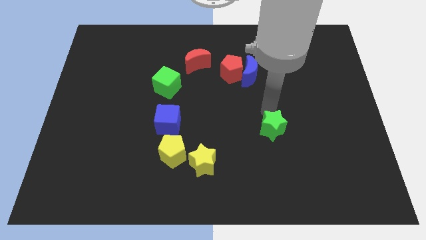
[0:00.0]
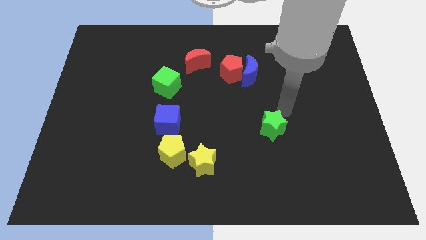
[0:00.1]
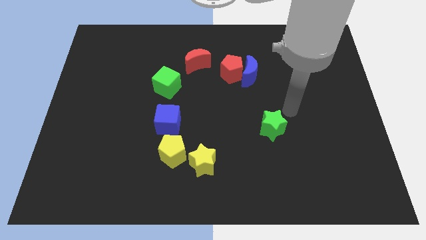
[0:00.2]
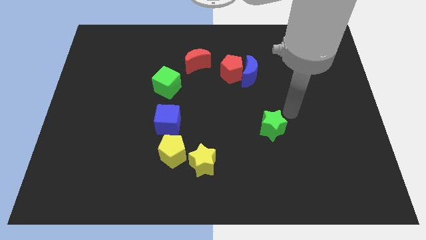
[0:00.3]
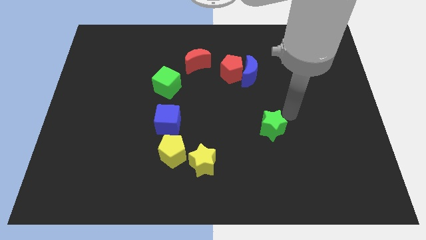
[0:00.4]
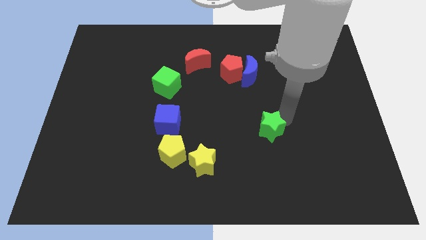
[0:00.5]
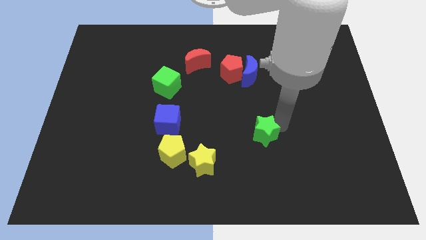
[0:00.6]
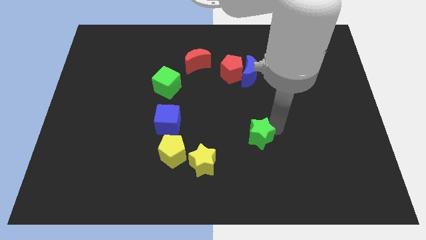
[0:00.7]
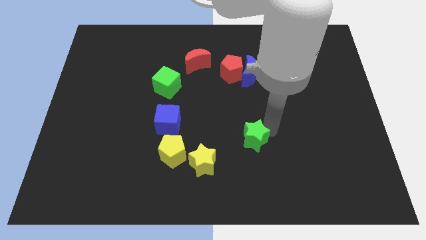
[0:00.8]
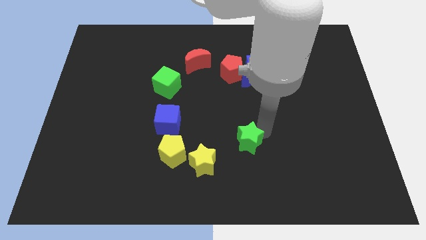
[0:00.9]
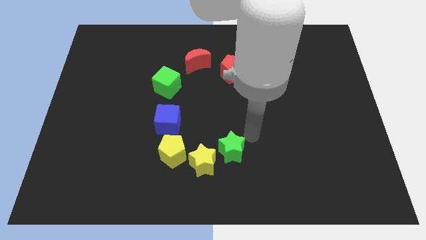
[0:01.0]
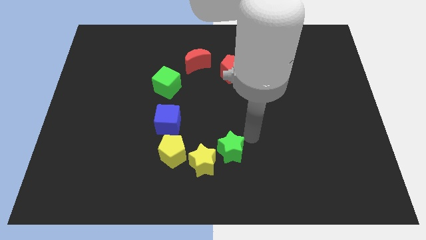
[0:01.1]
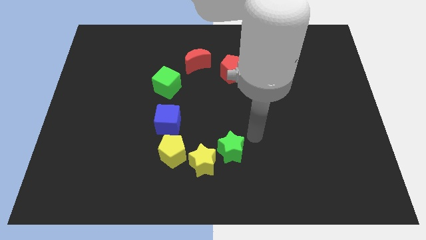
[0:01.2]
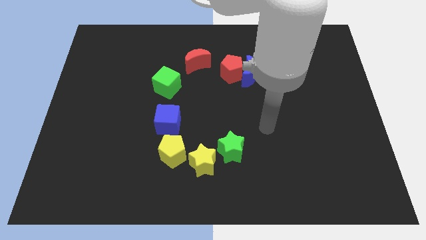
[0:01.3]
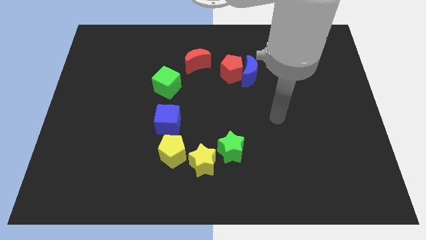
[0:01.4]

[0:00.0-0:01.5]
place the green star to the right side of the yellow star

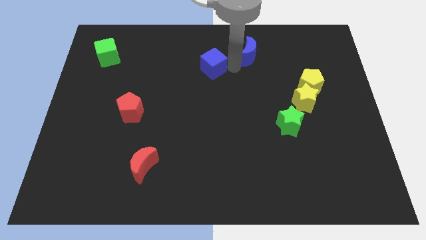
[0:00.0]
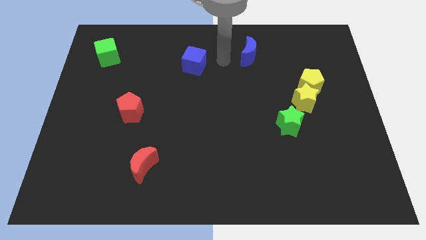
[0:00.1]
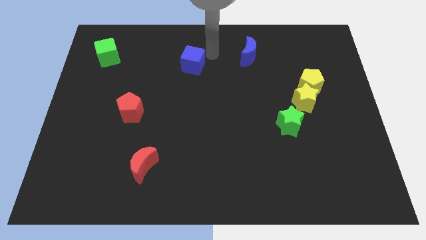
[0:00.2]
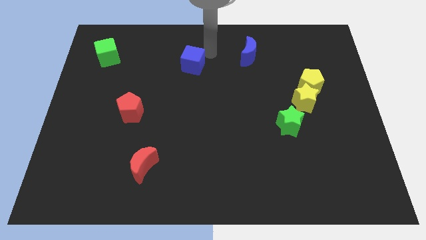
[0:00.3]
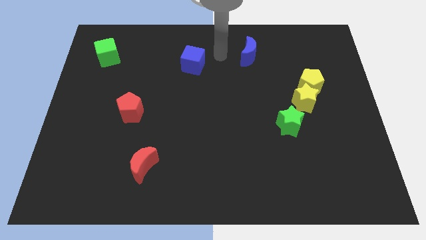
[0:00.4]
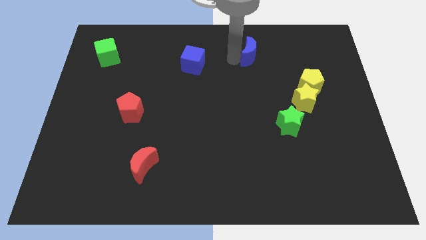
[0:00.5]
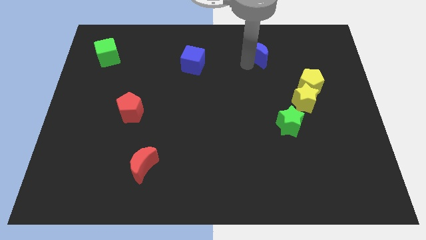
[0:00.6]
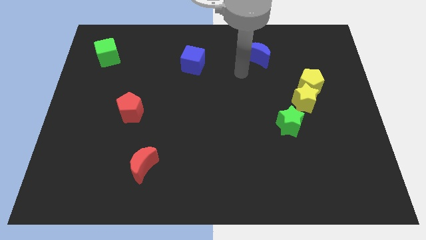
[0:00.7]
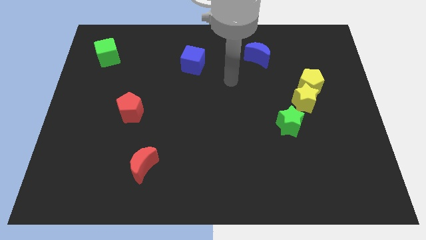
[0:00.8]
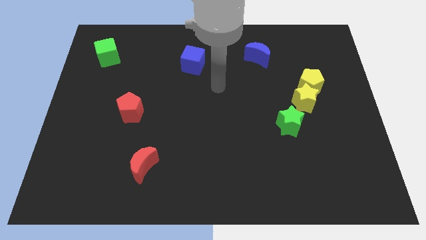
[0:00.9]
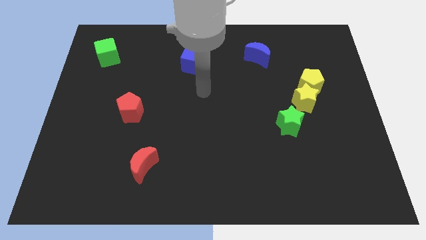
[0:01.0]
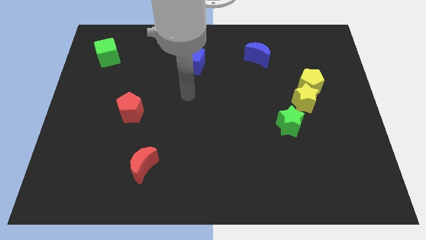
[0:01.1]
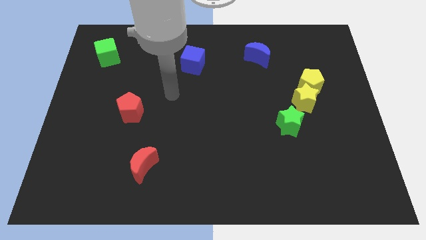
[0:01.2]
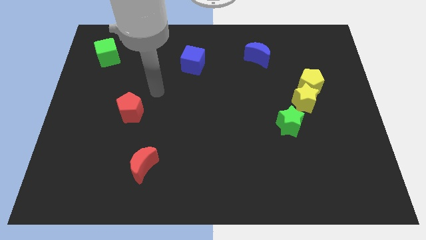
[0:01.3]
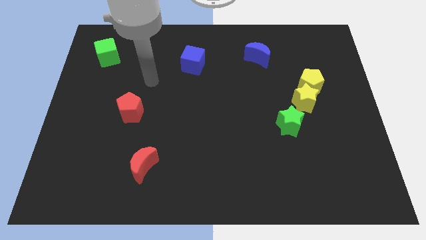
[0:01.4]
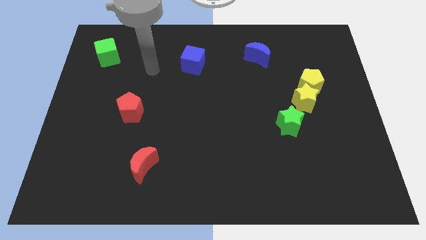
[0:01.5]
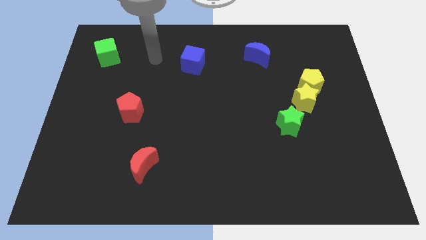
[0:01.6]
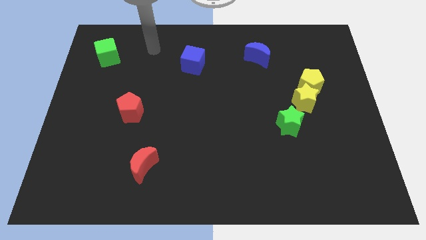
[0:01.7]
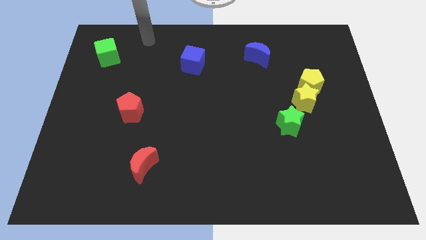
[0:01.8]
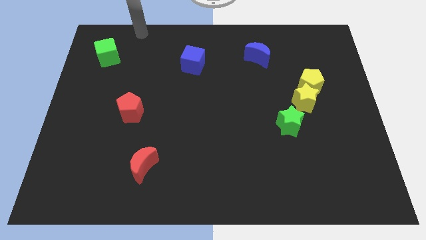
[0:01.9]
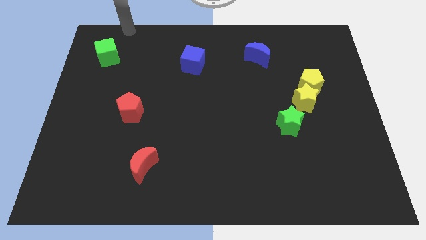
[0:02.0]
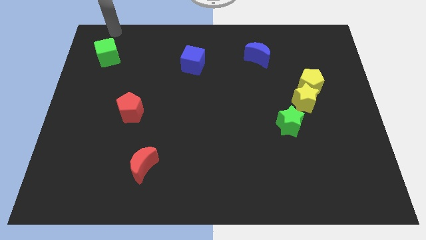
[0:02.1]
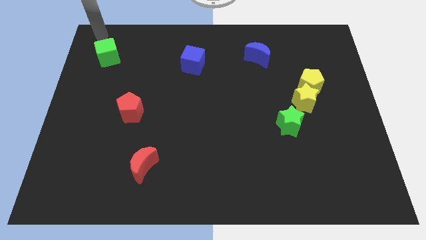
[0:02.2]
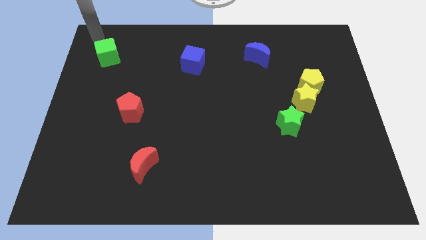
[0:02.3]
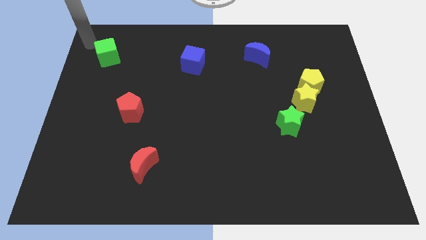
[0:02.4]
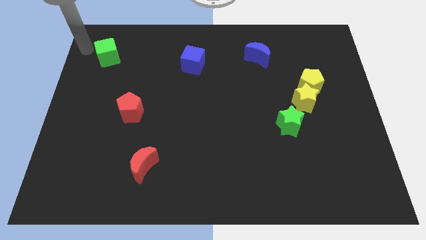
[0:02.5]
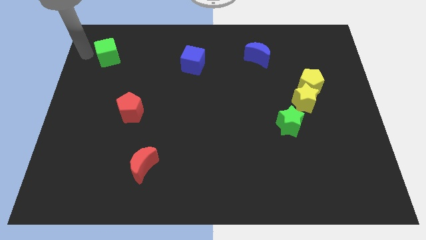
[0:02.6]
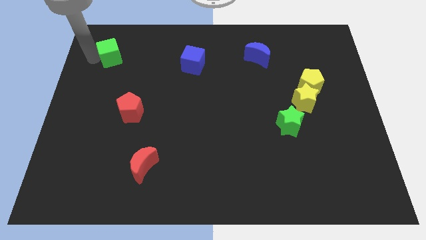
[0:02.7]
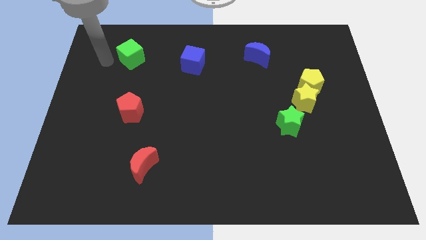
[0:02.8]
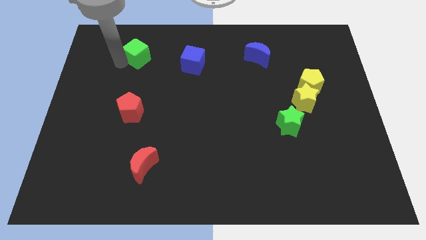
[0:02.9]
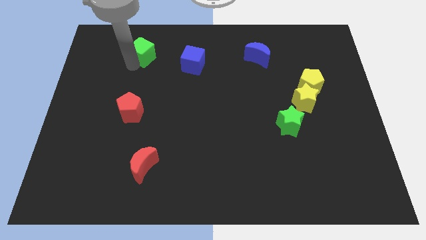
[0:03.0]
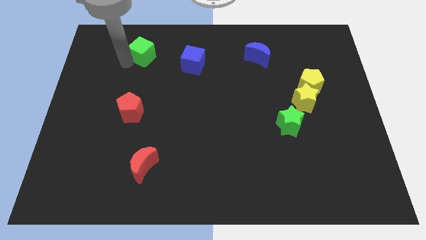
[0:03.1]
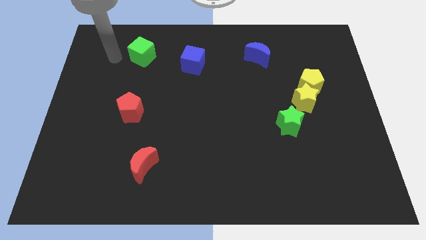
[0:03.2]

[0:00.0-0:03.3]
move both the green and blue squares to the top center

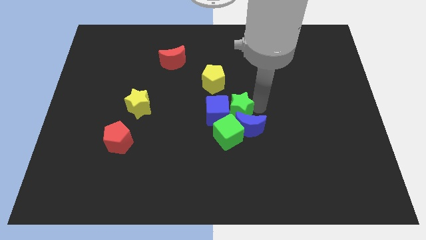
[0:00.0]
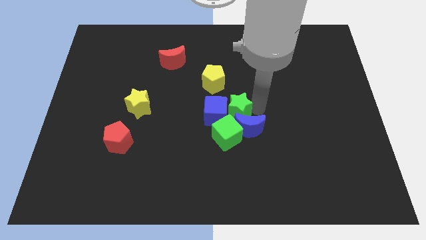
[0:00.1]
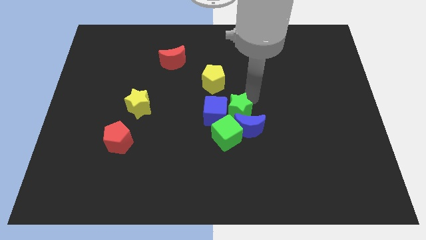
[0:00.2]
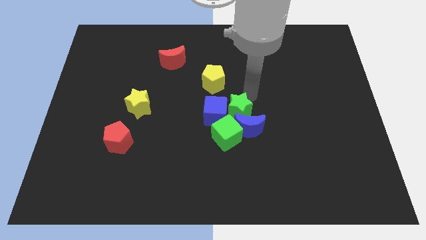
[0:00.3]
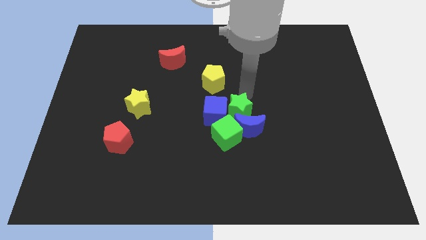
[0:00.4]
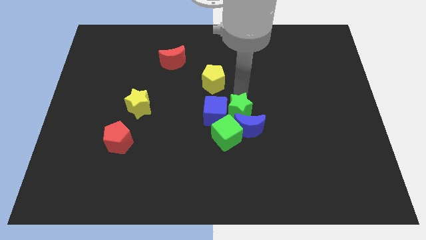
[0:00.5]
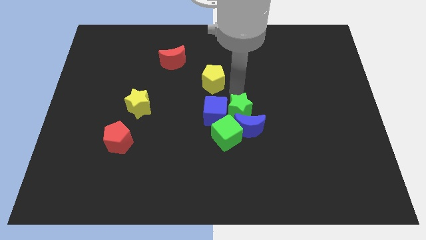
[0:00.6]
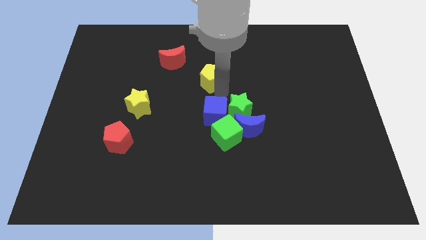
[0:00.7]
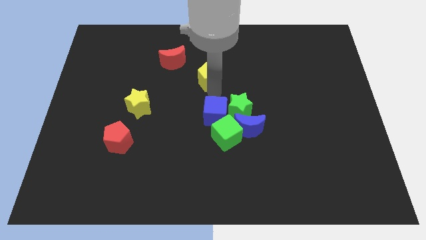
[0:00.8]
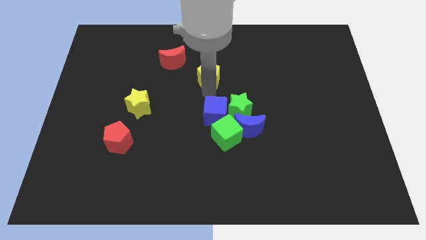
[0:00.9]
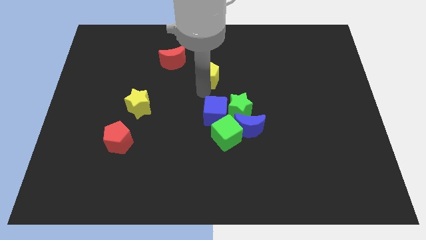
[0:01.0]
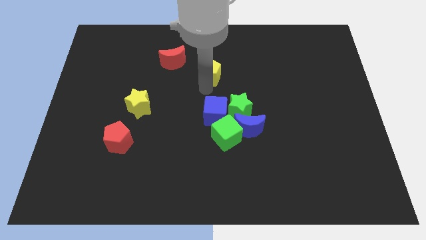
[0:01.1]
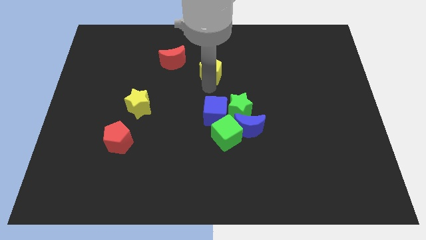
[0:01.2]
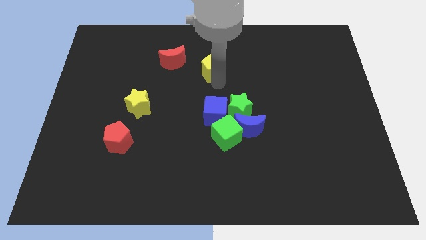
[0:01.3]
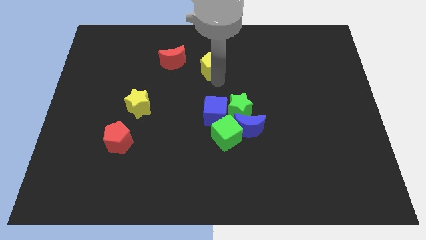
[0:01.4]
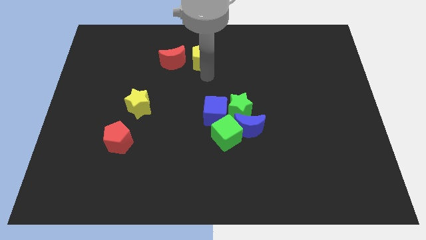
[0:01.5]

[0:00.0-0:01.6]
move the yellow pentagon to the right of red moon

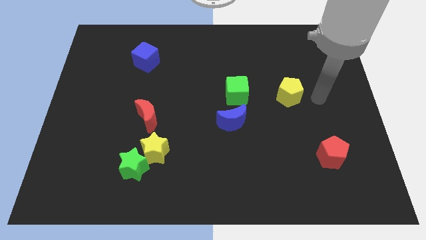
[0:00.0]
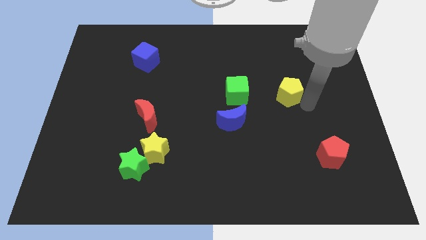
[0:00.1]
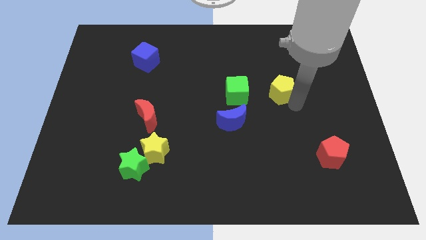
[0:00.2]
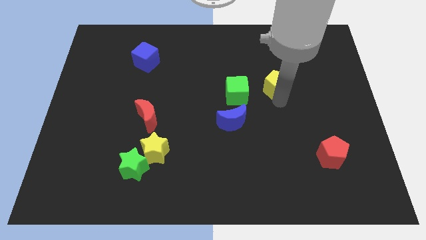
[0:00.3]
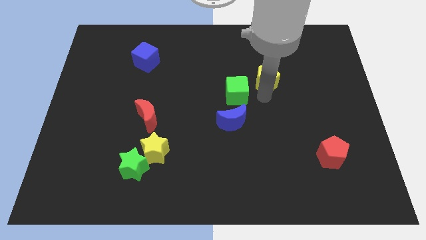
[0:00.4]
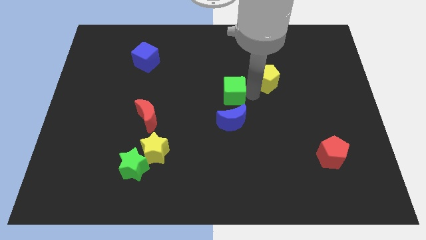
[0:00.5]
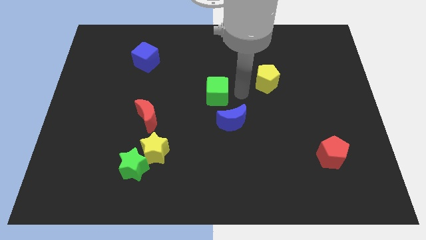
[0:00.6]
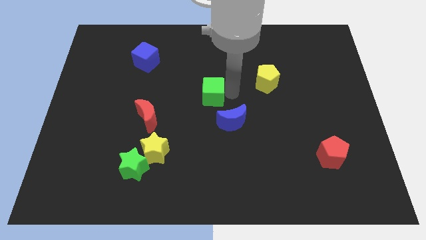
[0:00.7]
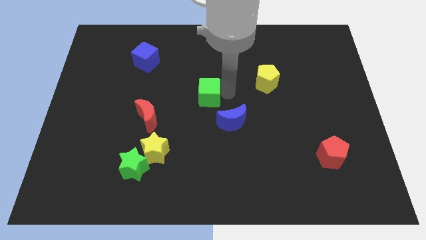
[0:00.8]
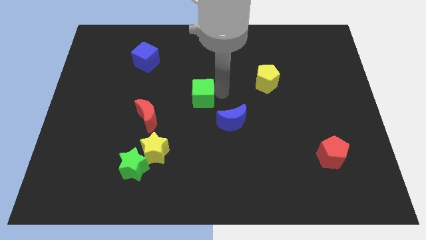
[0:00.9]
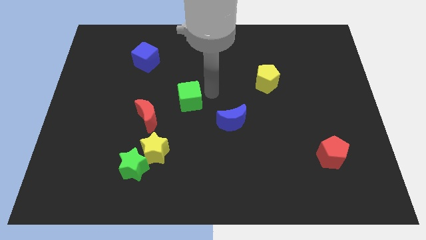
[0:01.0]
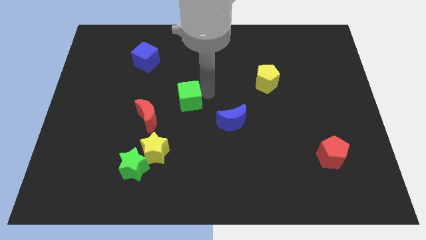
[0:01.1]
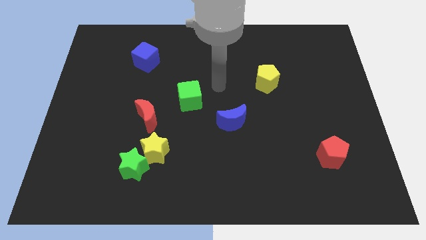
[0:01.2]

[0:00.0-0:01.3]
move the green cube diagonally in between the blue cube and the blue crescent

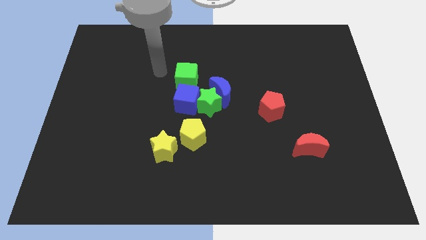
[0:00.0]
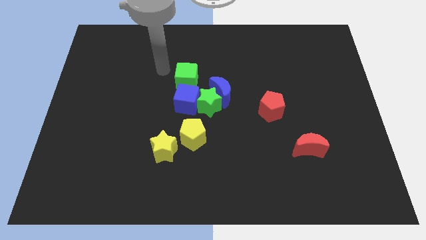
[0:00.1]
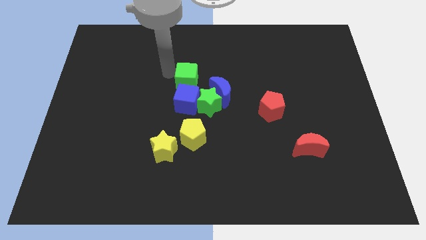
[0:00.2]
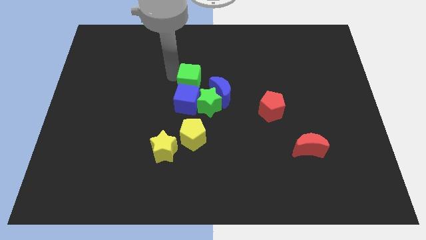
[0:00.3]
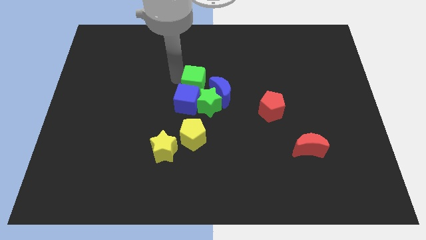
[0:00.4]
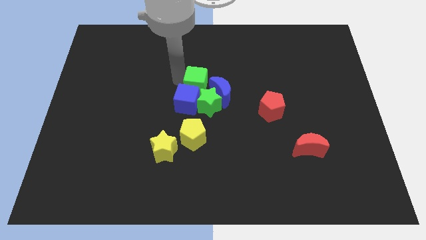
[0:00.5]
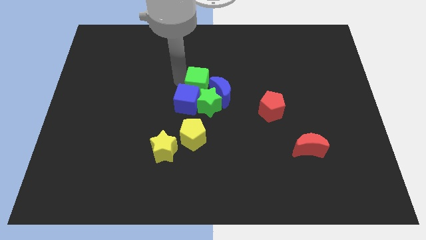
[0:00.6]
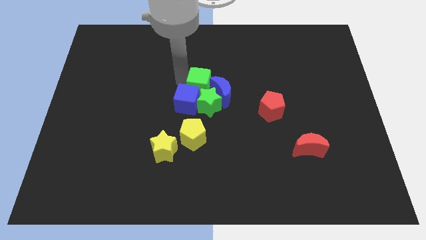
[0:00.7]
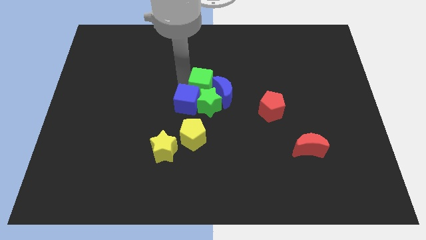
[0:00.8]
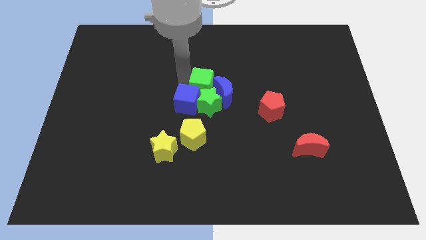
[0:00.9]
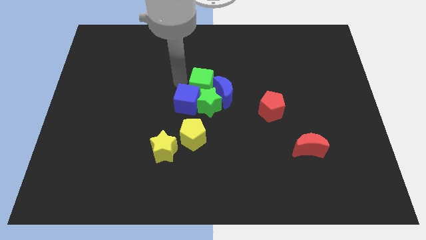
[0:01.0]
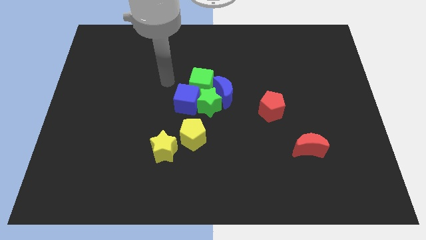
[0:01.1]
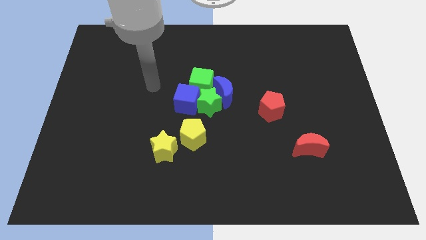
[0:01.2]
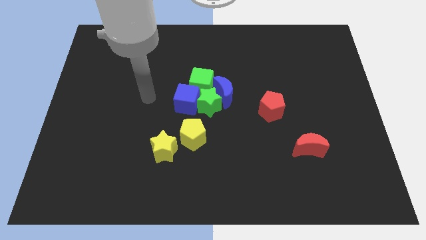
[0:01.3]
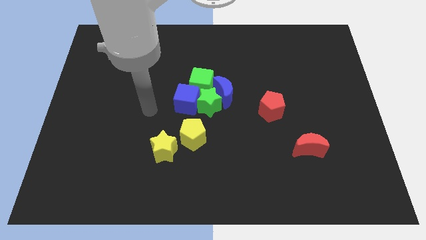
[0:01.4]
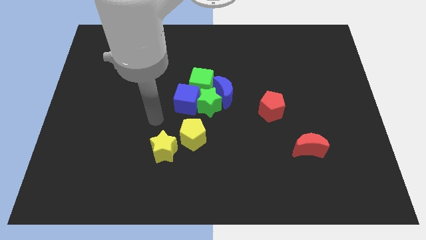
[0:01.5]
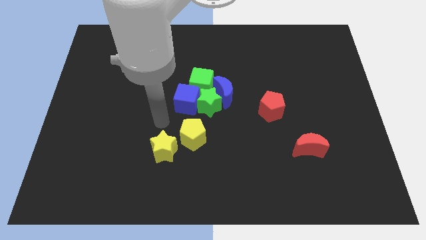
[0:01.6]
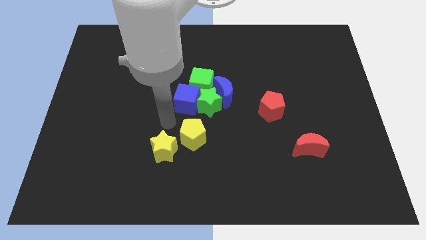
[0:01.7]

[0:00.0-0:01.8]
place the green cube above the green star
